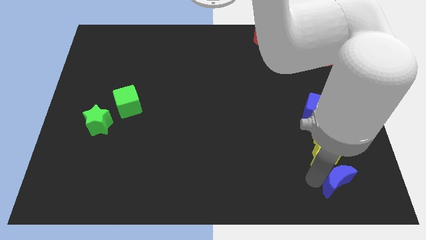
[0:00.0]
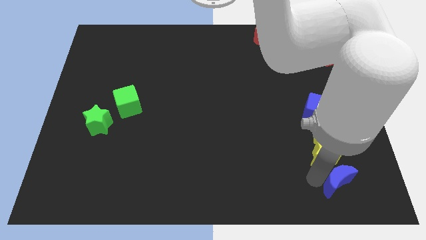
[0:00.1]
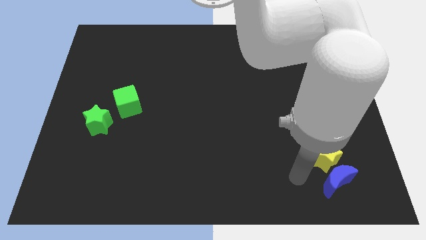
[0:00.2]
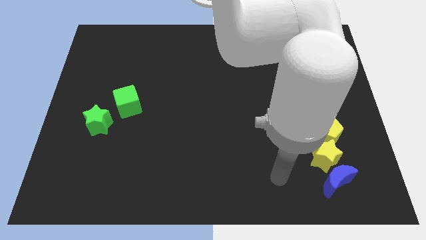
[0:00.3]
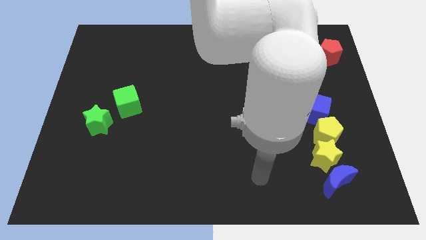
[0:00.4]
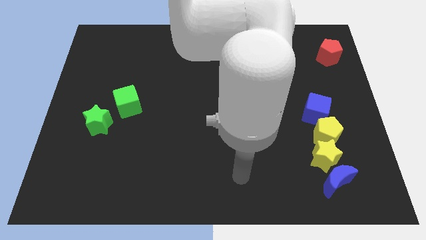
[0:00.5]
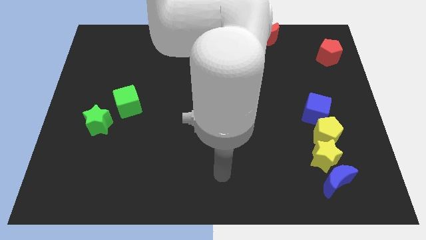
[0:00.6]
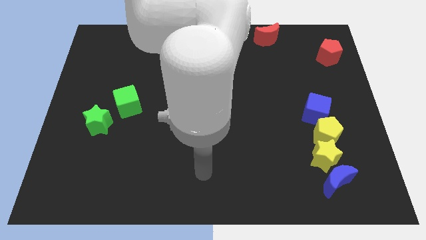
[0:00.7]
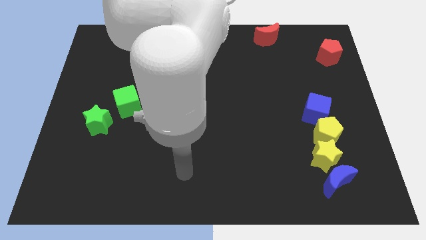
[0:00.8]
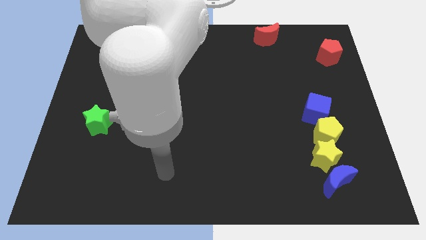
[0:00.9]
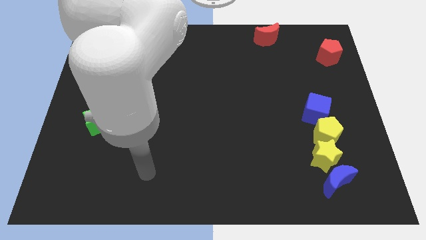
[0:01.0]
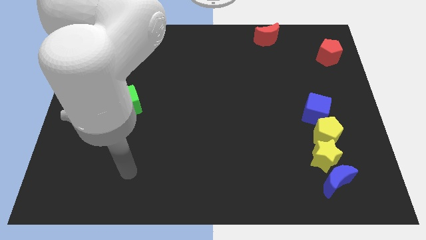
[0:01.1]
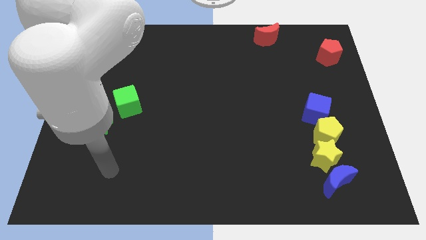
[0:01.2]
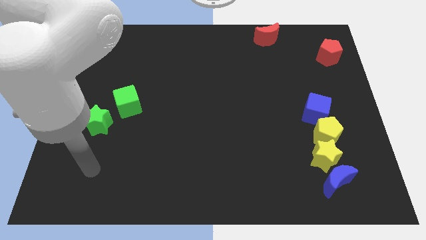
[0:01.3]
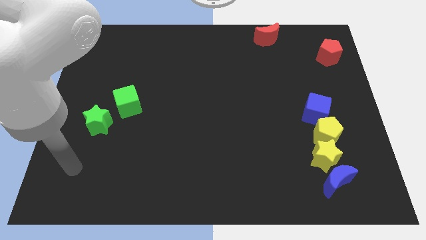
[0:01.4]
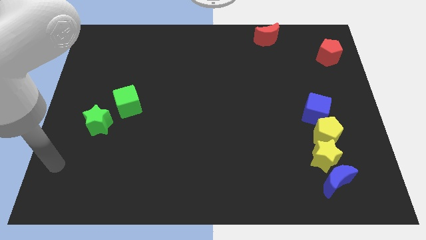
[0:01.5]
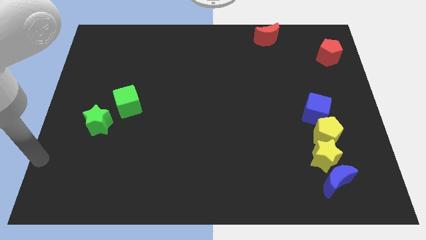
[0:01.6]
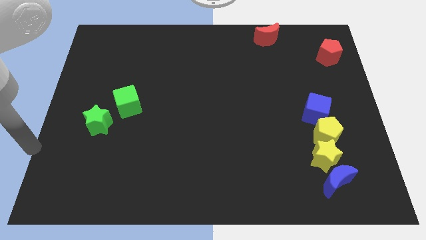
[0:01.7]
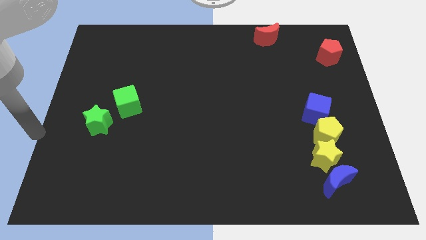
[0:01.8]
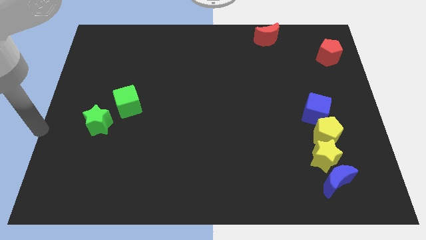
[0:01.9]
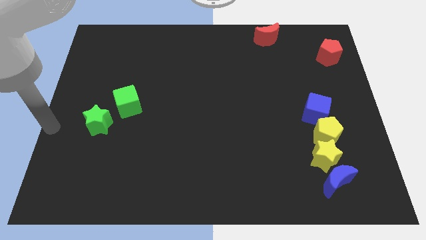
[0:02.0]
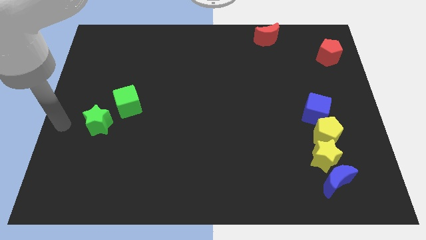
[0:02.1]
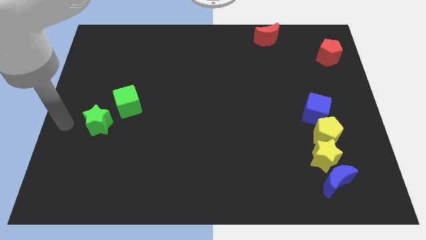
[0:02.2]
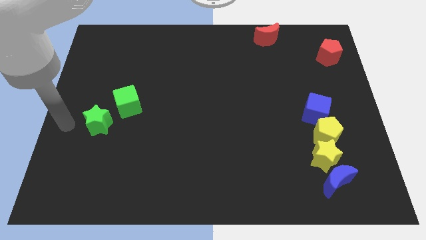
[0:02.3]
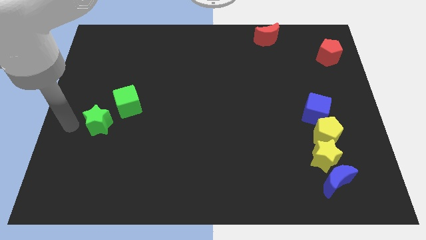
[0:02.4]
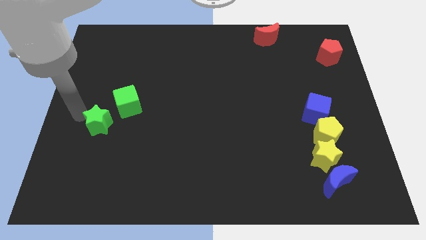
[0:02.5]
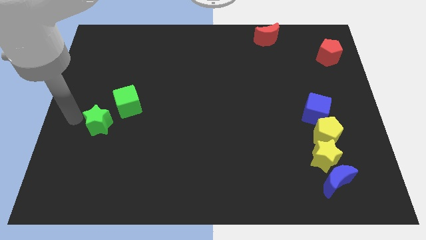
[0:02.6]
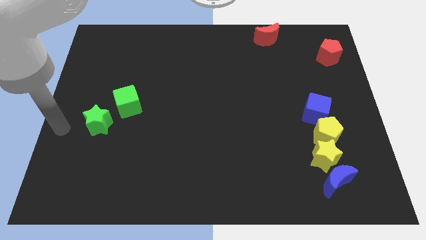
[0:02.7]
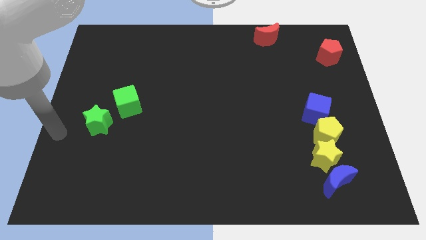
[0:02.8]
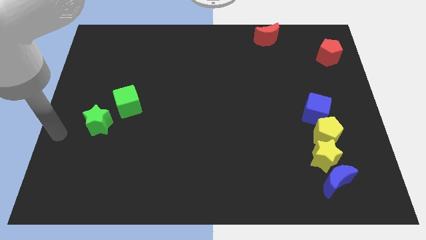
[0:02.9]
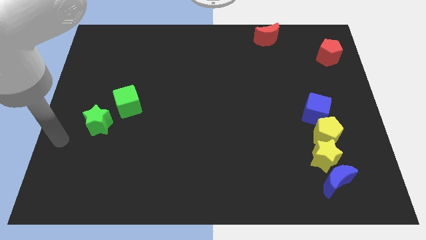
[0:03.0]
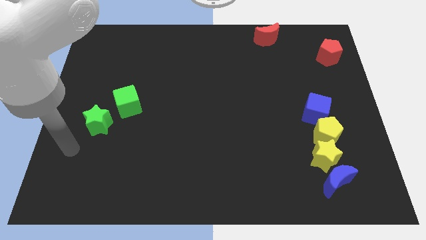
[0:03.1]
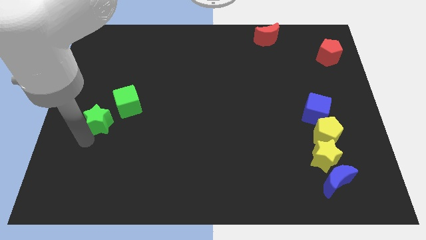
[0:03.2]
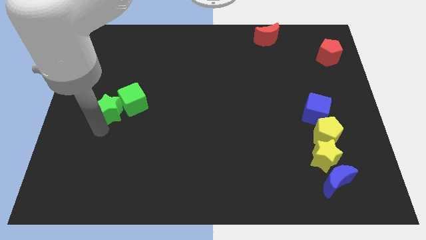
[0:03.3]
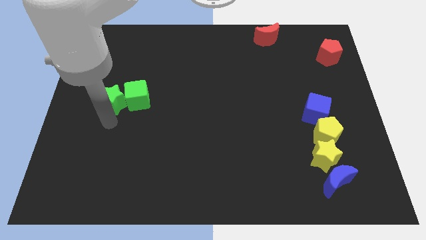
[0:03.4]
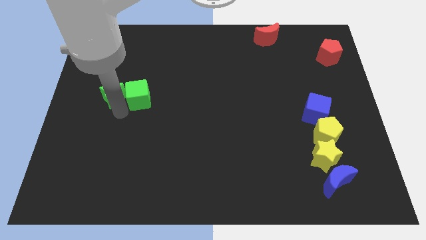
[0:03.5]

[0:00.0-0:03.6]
push the green blocks slightly to the right

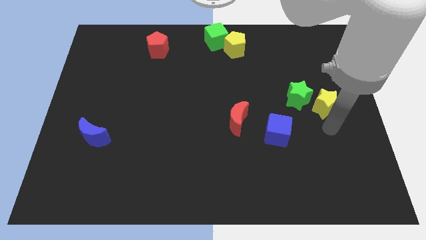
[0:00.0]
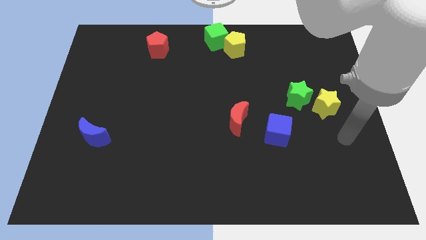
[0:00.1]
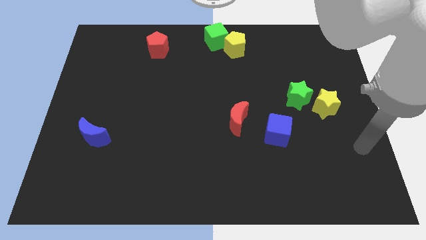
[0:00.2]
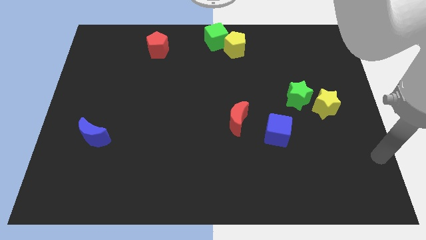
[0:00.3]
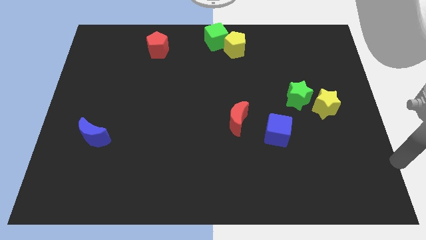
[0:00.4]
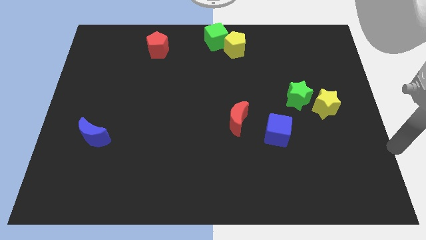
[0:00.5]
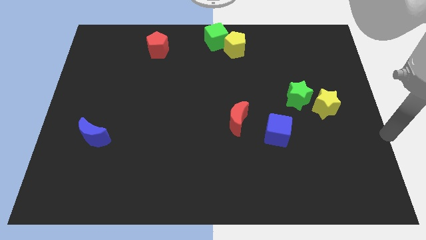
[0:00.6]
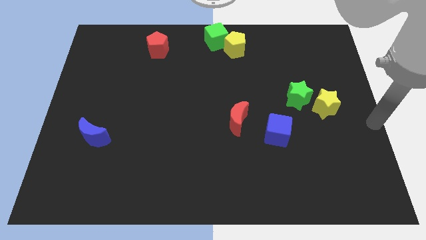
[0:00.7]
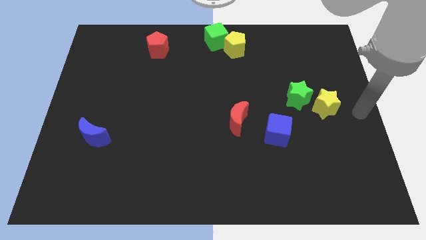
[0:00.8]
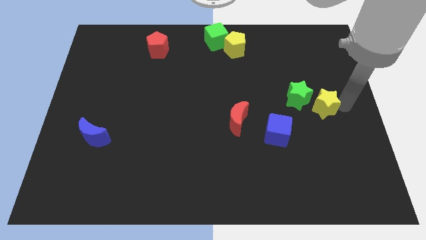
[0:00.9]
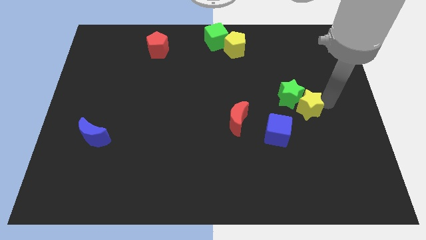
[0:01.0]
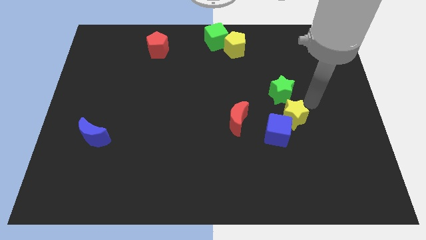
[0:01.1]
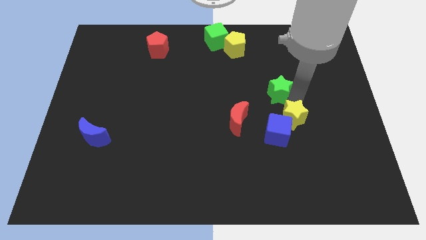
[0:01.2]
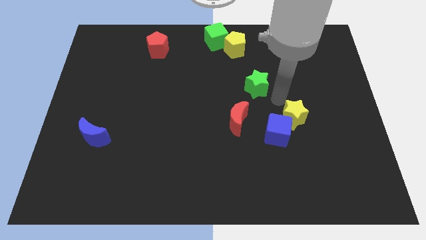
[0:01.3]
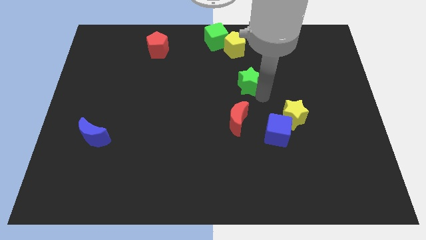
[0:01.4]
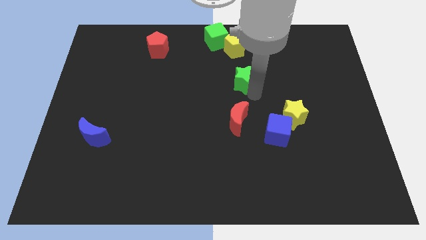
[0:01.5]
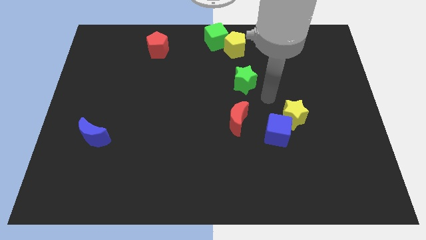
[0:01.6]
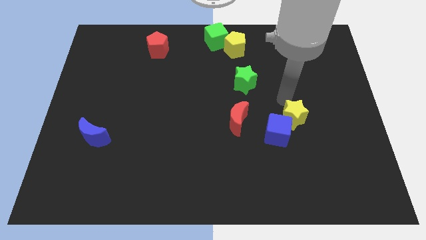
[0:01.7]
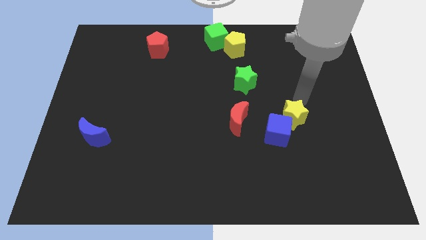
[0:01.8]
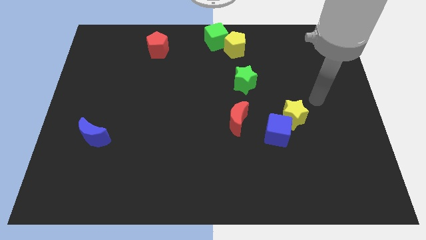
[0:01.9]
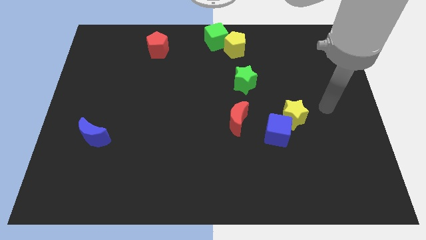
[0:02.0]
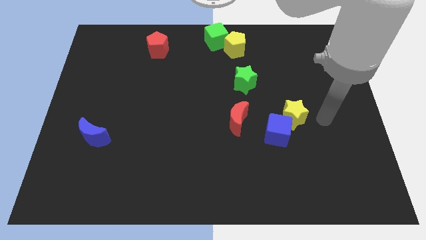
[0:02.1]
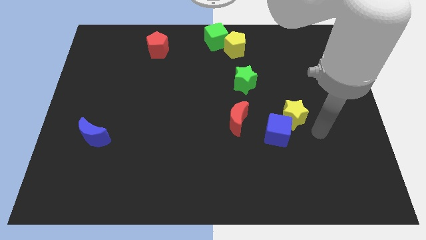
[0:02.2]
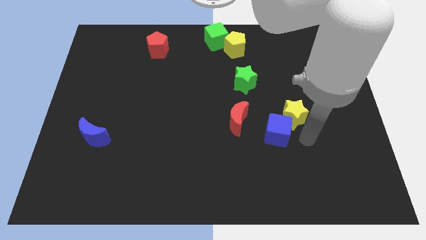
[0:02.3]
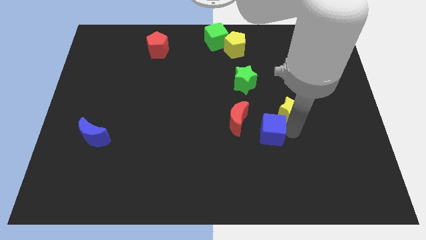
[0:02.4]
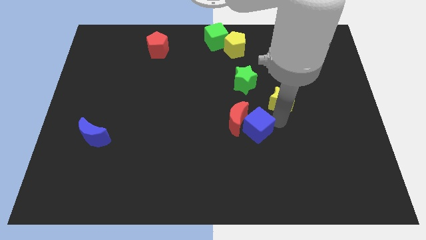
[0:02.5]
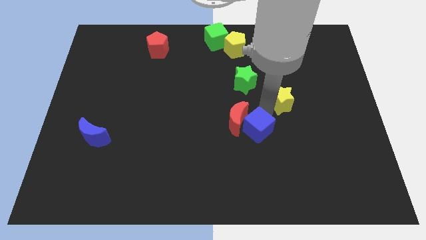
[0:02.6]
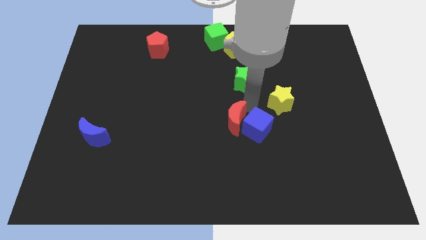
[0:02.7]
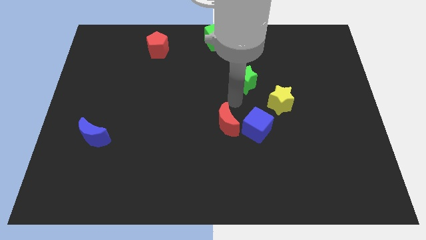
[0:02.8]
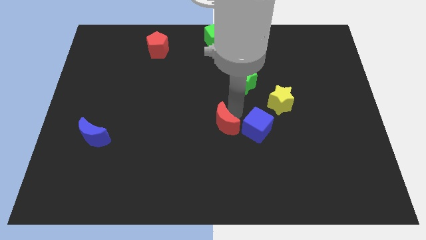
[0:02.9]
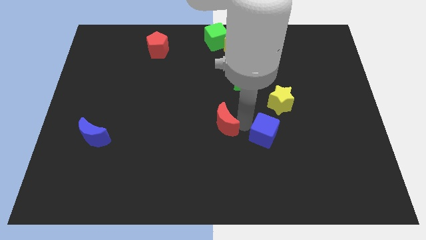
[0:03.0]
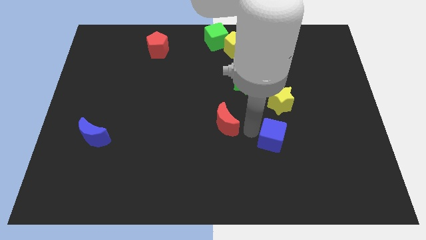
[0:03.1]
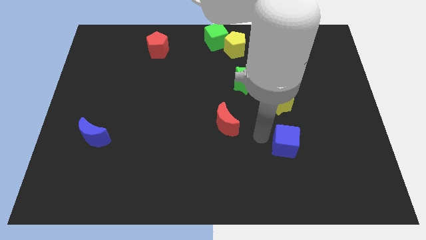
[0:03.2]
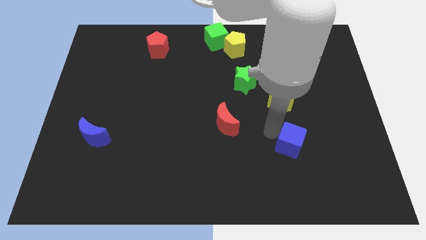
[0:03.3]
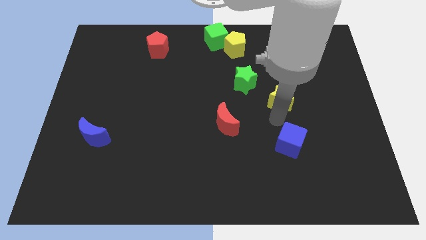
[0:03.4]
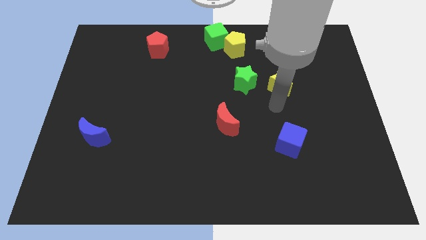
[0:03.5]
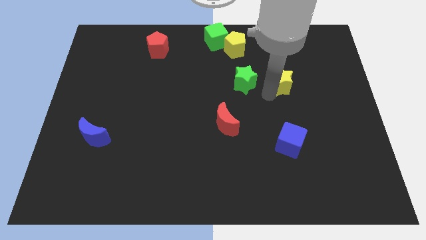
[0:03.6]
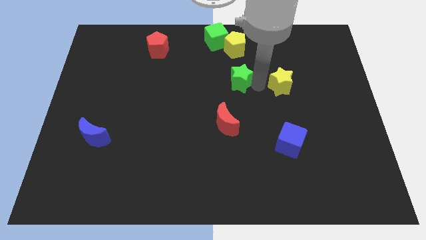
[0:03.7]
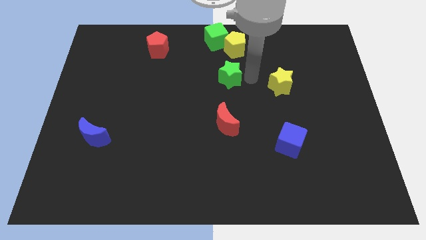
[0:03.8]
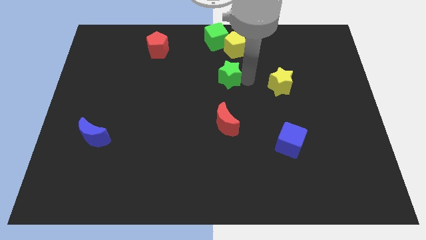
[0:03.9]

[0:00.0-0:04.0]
move the green star to the bottom of the yellow pentagon

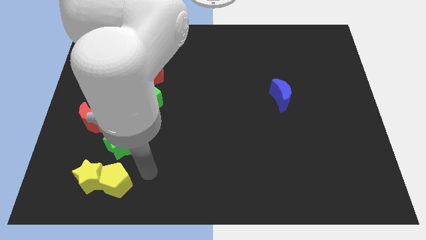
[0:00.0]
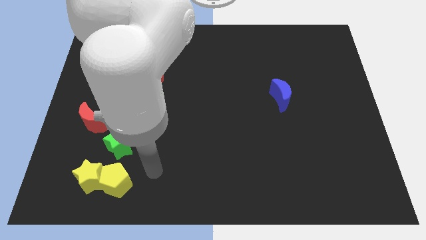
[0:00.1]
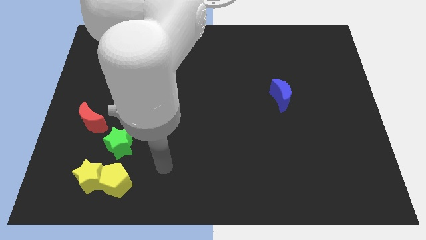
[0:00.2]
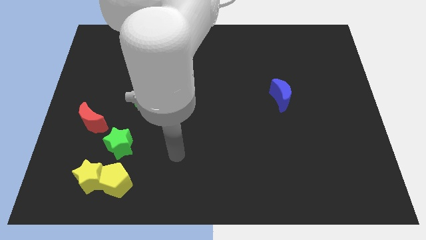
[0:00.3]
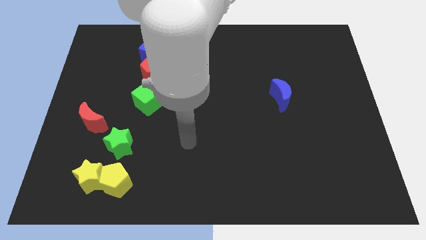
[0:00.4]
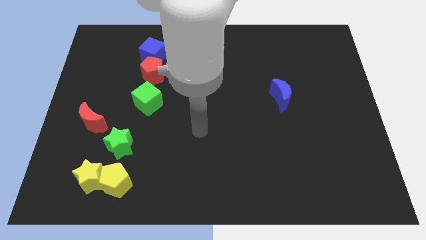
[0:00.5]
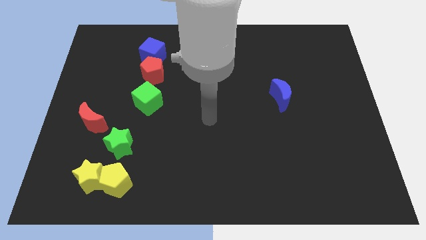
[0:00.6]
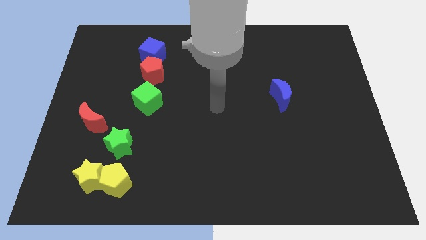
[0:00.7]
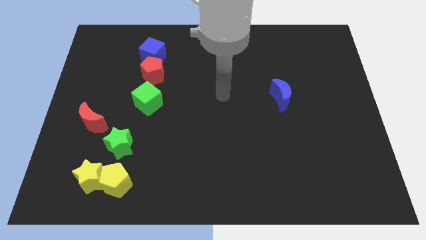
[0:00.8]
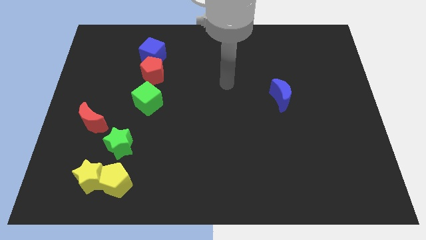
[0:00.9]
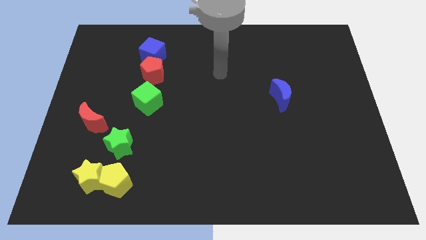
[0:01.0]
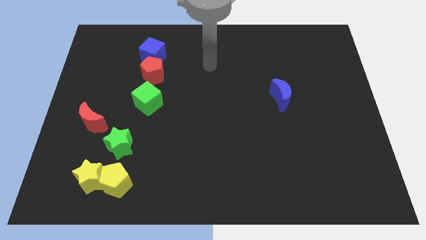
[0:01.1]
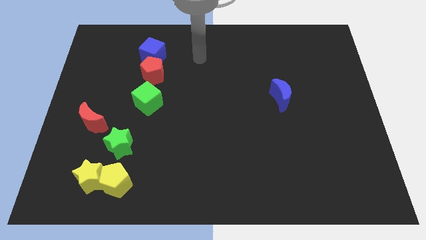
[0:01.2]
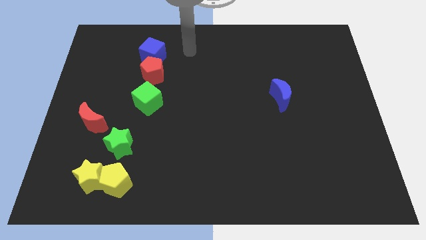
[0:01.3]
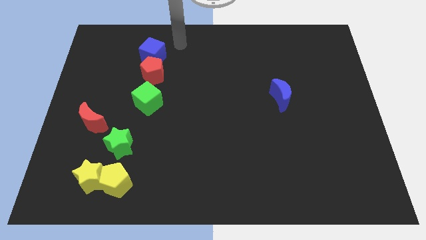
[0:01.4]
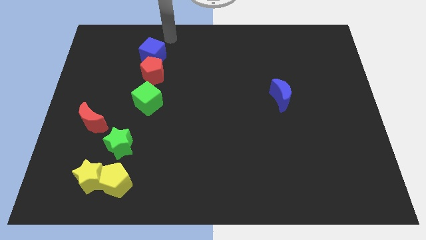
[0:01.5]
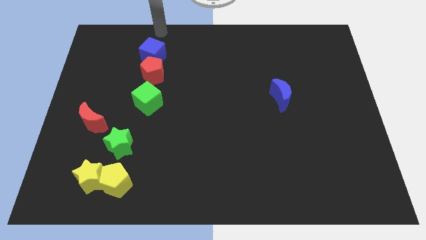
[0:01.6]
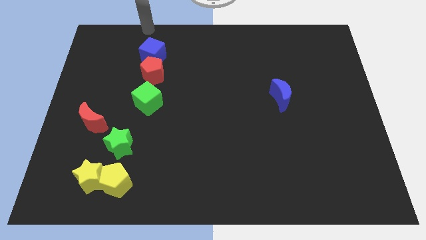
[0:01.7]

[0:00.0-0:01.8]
point your hand at the top side of the blue cube
